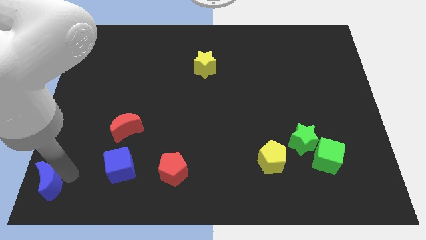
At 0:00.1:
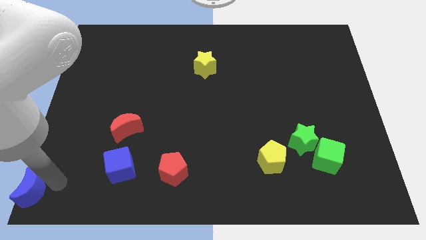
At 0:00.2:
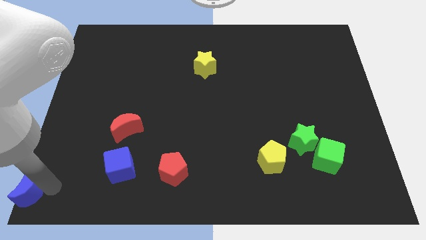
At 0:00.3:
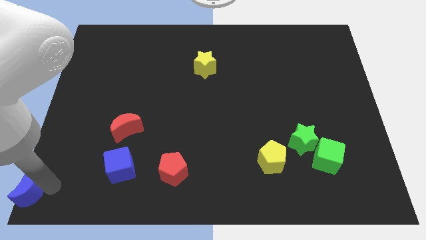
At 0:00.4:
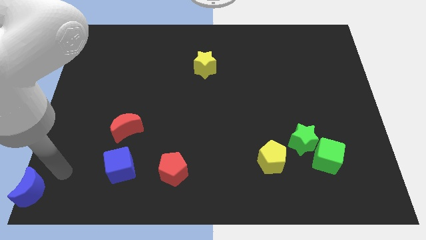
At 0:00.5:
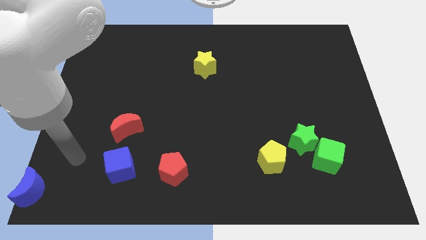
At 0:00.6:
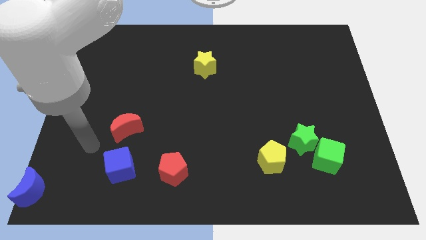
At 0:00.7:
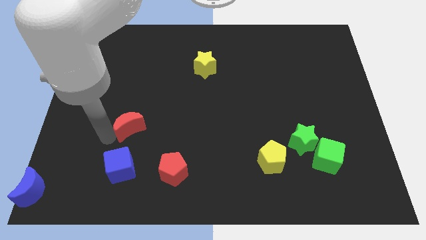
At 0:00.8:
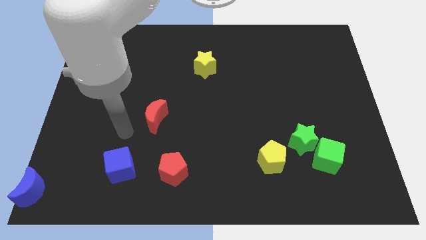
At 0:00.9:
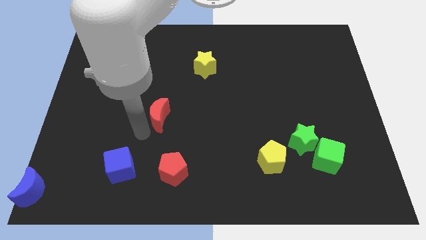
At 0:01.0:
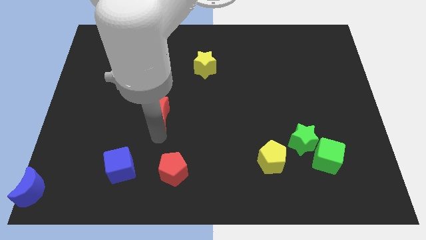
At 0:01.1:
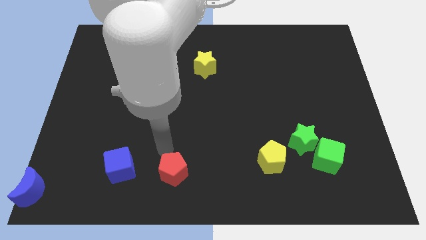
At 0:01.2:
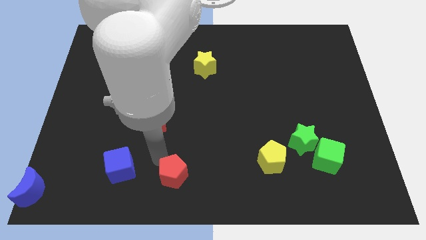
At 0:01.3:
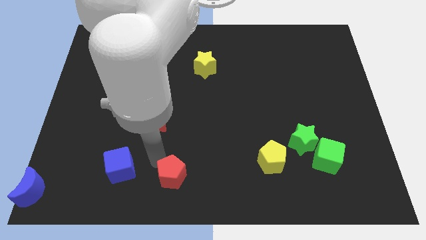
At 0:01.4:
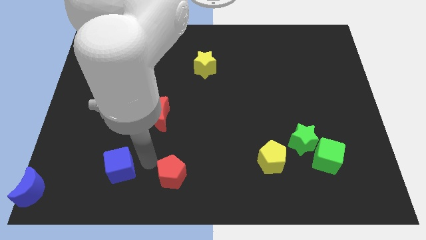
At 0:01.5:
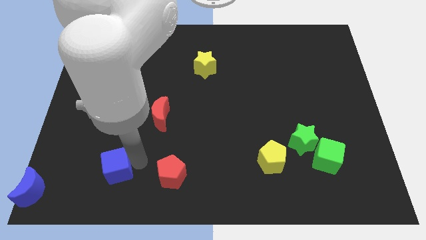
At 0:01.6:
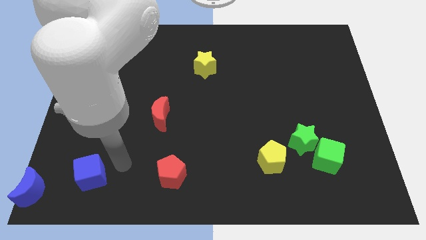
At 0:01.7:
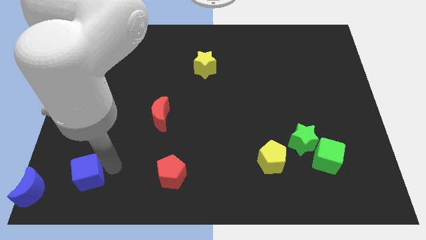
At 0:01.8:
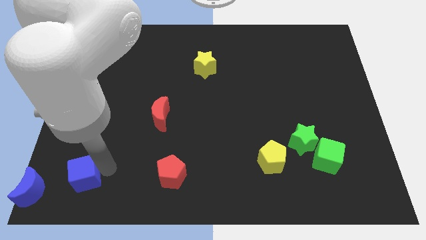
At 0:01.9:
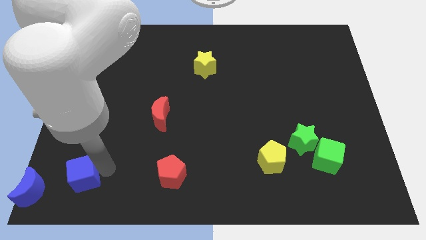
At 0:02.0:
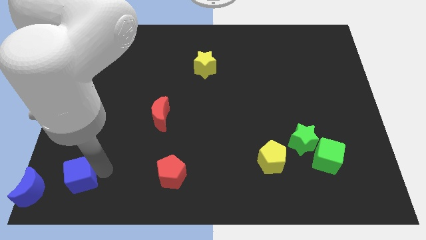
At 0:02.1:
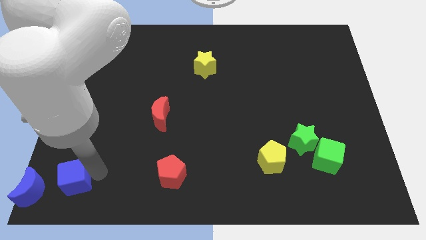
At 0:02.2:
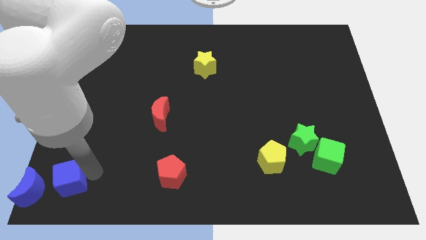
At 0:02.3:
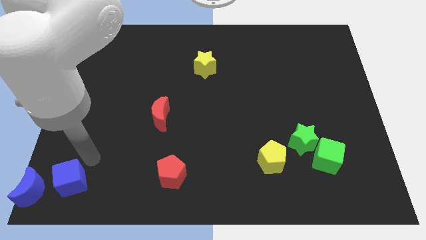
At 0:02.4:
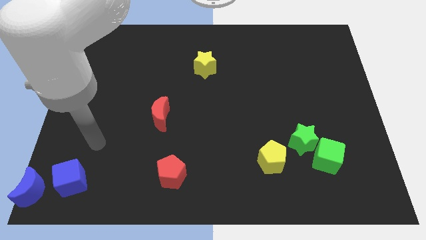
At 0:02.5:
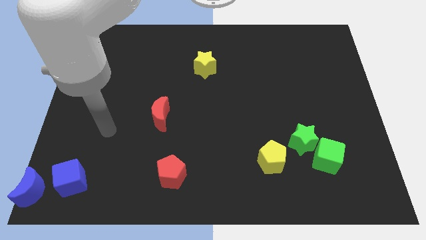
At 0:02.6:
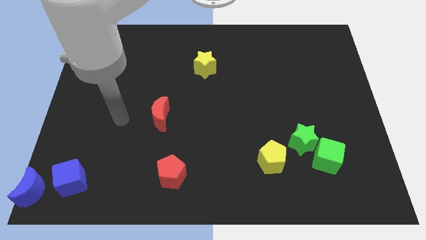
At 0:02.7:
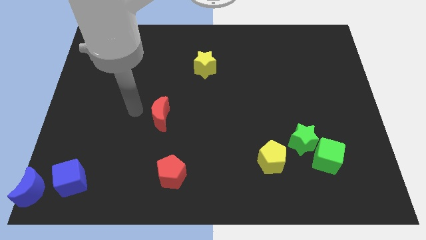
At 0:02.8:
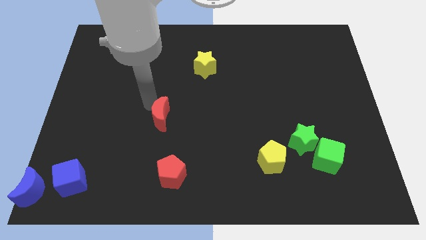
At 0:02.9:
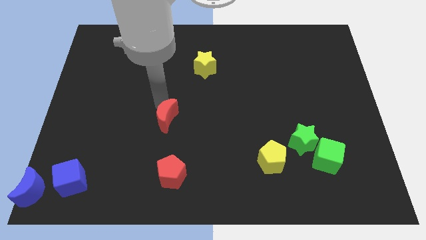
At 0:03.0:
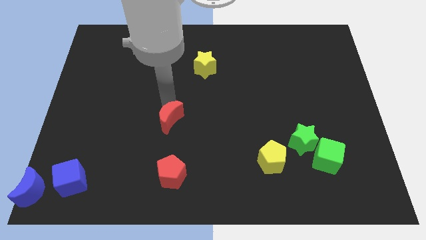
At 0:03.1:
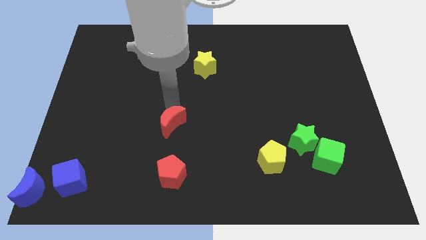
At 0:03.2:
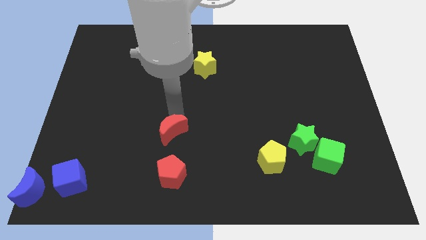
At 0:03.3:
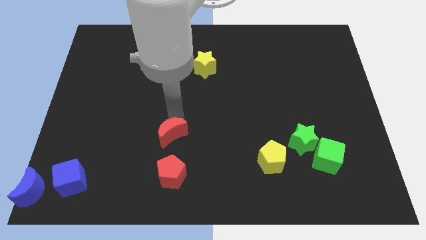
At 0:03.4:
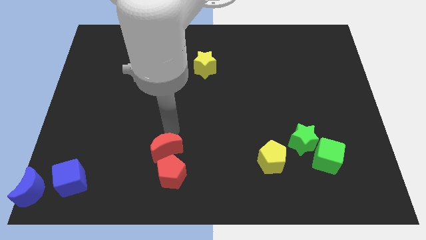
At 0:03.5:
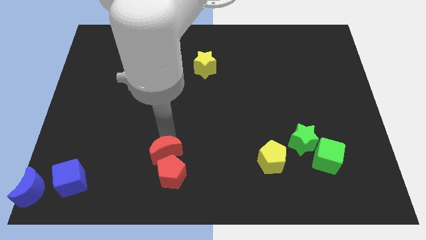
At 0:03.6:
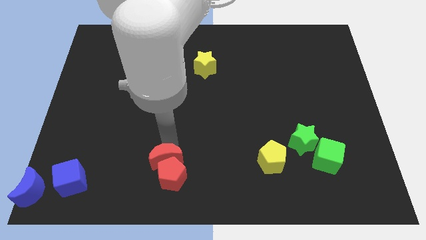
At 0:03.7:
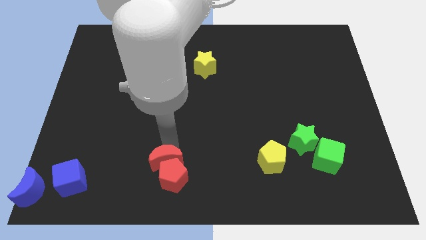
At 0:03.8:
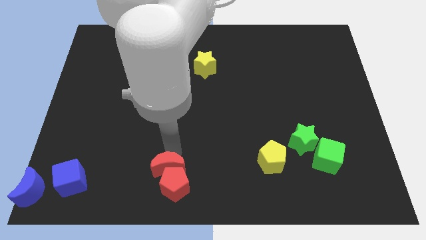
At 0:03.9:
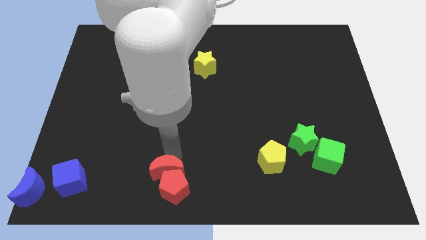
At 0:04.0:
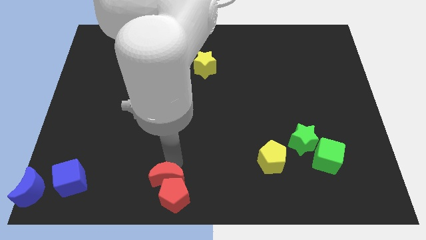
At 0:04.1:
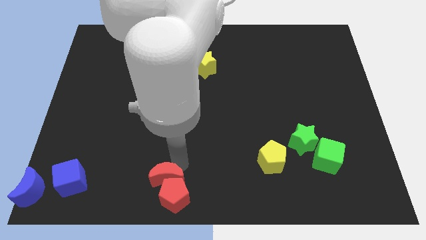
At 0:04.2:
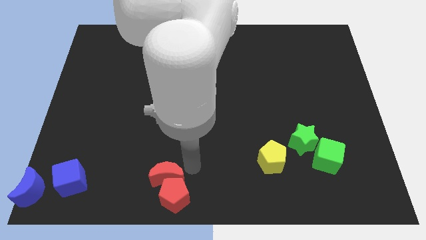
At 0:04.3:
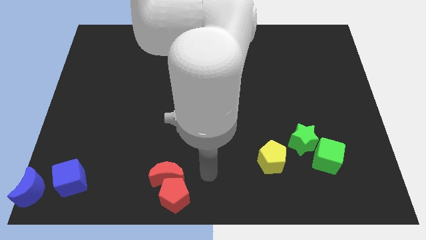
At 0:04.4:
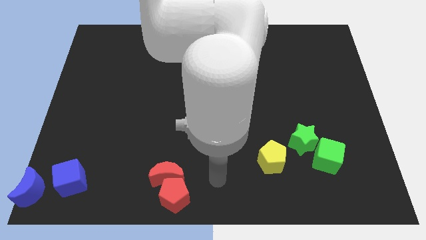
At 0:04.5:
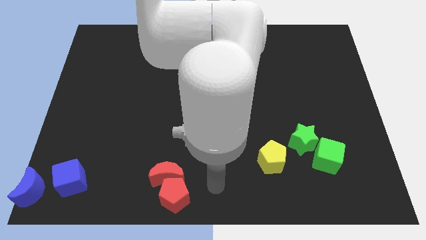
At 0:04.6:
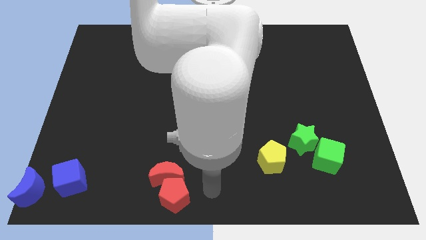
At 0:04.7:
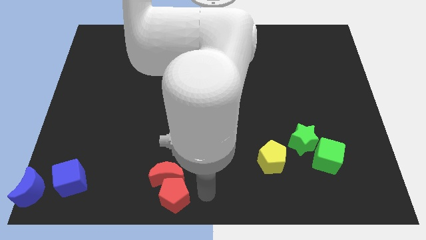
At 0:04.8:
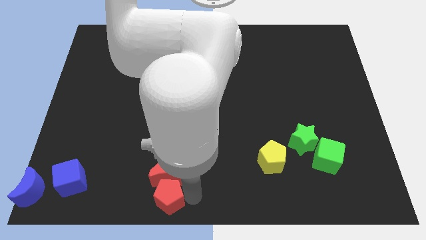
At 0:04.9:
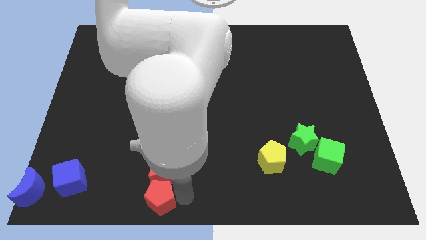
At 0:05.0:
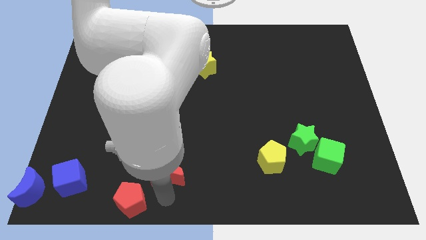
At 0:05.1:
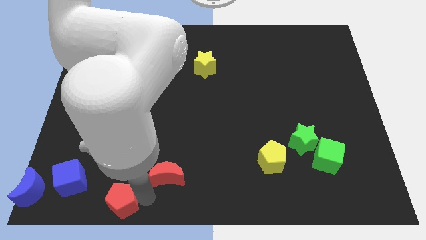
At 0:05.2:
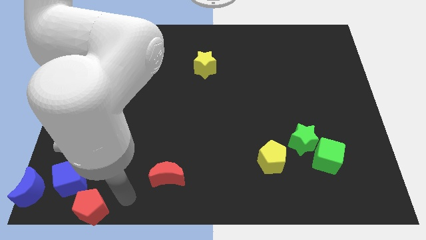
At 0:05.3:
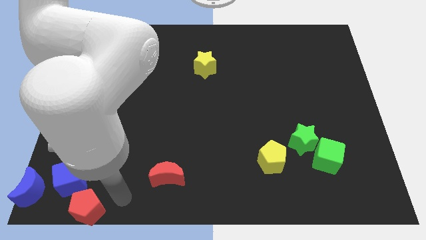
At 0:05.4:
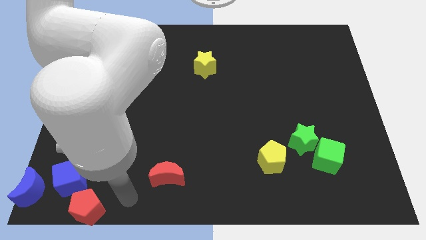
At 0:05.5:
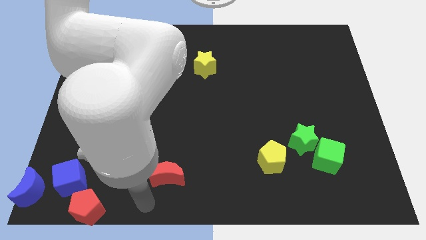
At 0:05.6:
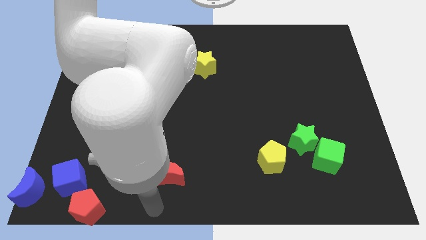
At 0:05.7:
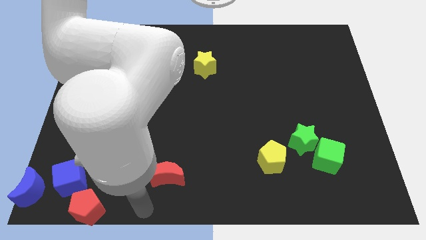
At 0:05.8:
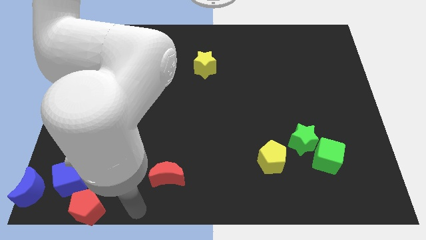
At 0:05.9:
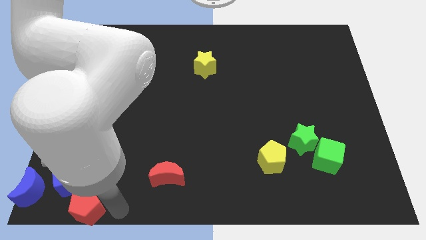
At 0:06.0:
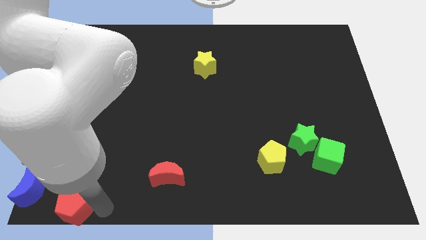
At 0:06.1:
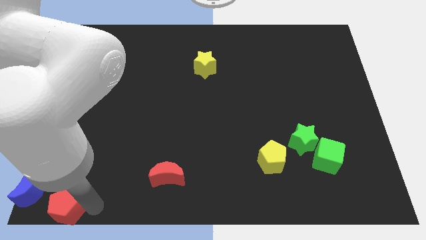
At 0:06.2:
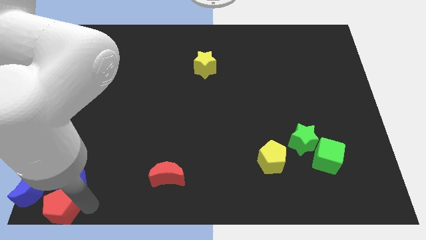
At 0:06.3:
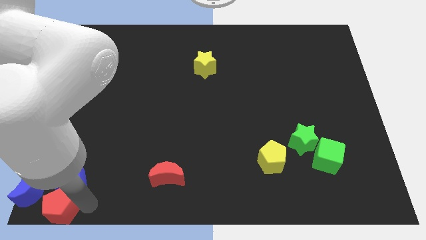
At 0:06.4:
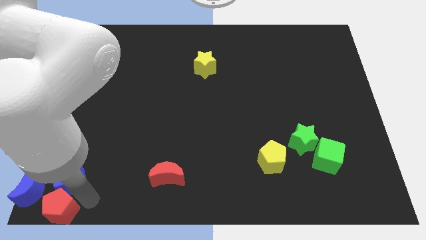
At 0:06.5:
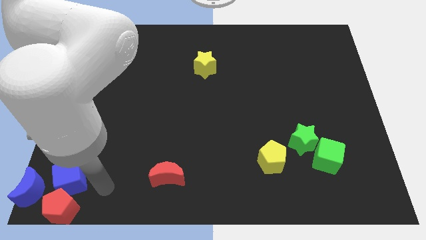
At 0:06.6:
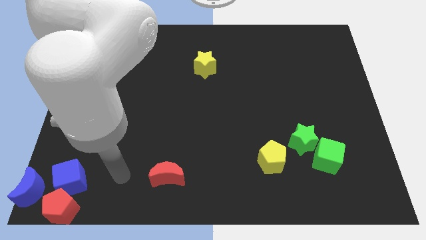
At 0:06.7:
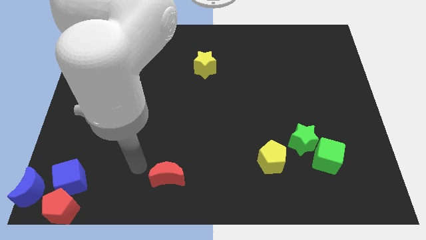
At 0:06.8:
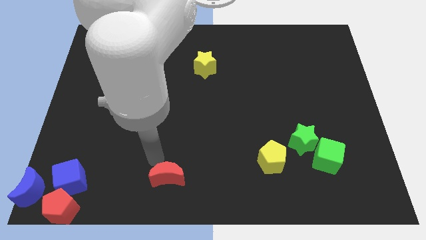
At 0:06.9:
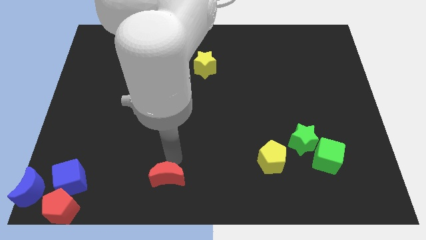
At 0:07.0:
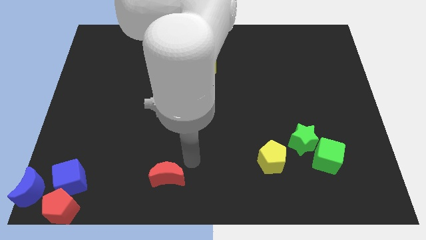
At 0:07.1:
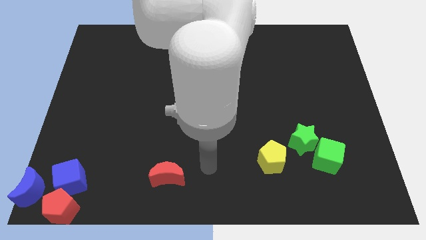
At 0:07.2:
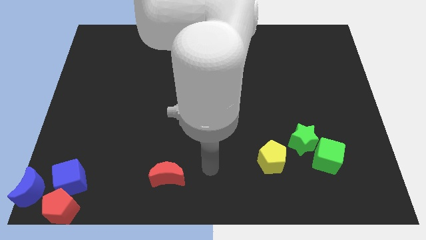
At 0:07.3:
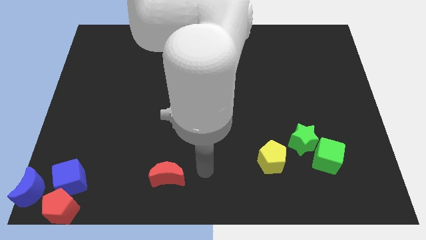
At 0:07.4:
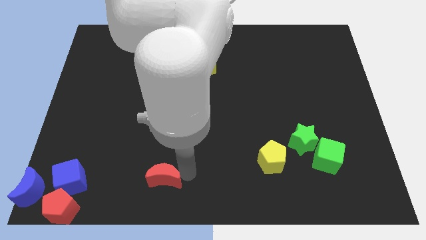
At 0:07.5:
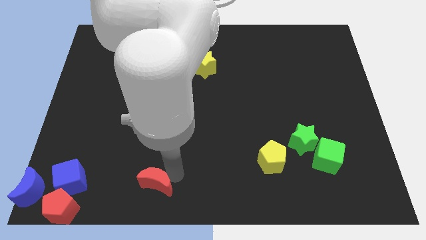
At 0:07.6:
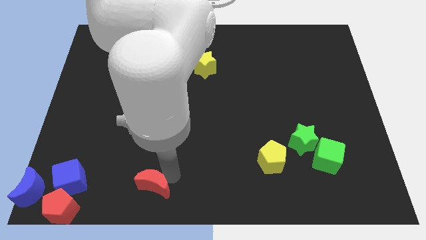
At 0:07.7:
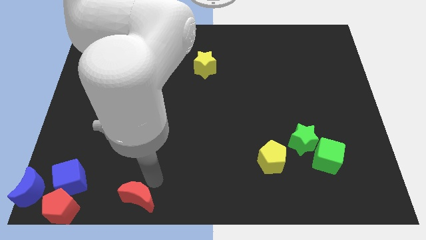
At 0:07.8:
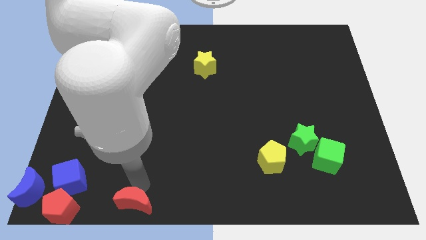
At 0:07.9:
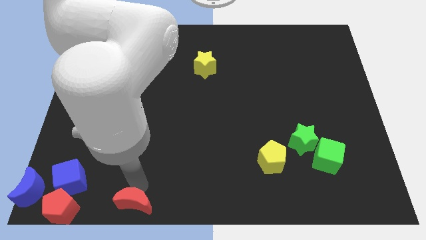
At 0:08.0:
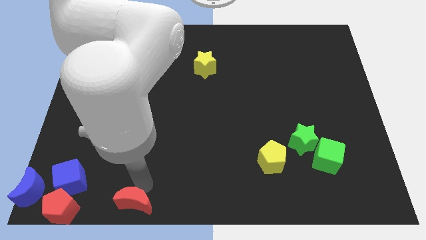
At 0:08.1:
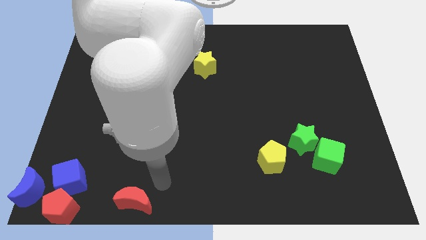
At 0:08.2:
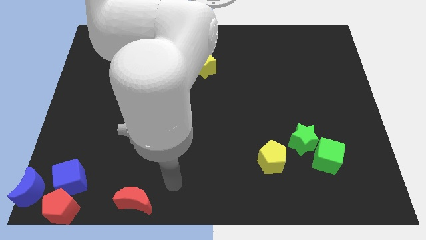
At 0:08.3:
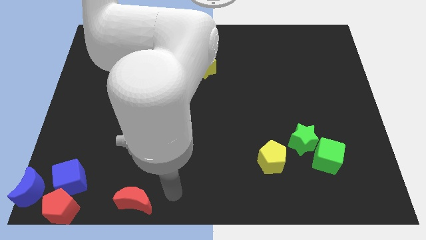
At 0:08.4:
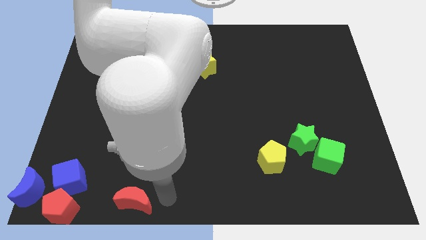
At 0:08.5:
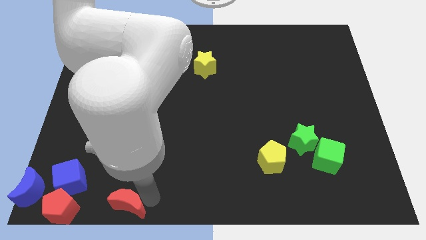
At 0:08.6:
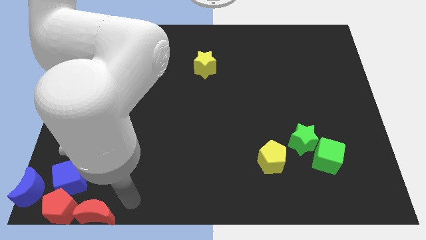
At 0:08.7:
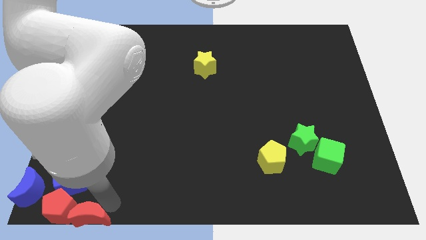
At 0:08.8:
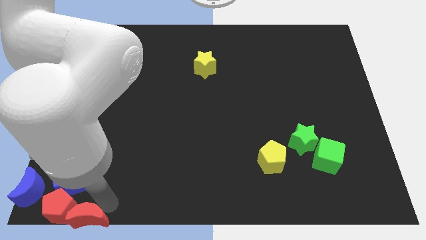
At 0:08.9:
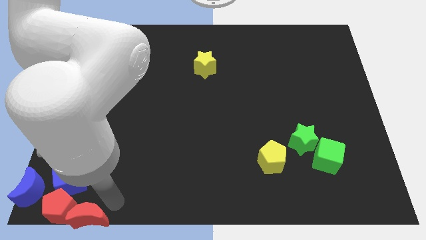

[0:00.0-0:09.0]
bring the blue blocks and red blocks at the bottom left of the table
